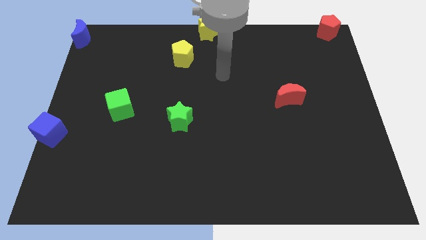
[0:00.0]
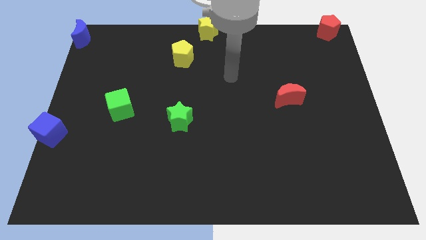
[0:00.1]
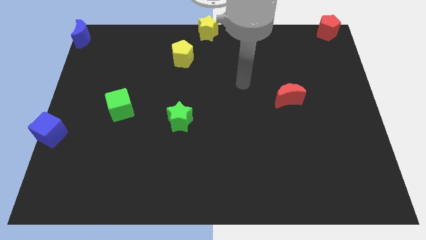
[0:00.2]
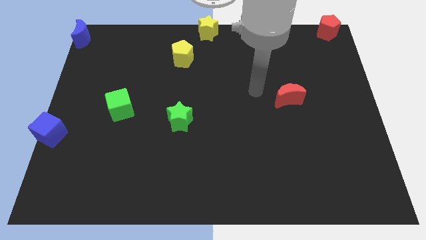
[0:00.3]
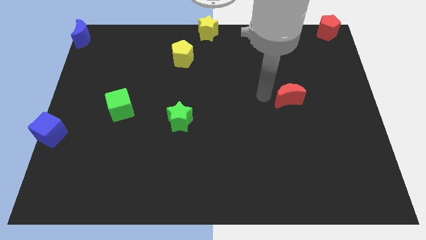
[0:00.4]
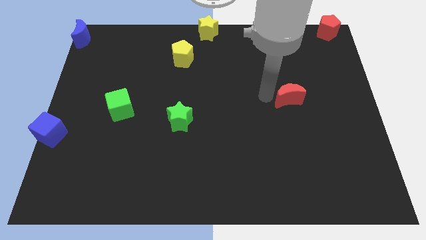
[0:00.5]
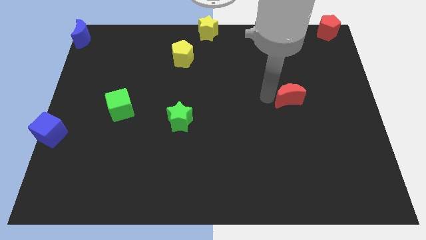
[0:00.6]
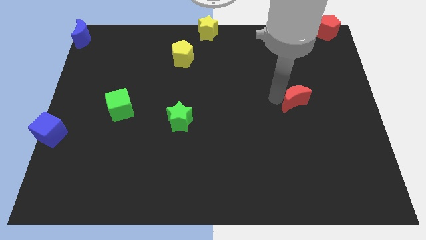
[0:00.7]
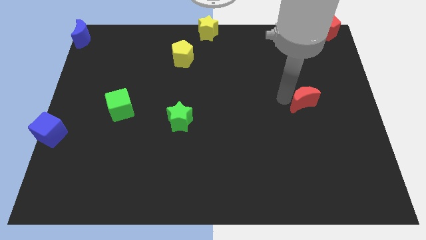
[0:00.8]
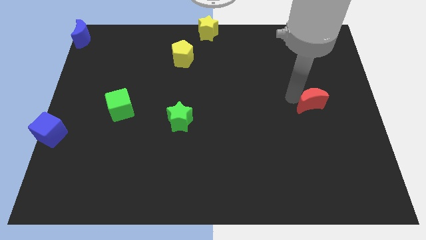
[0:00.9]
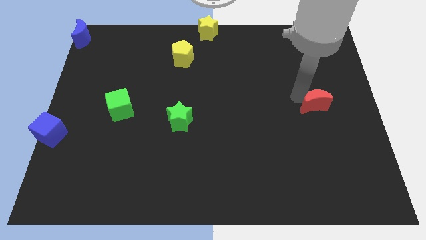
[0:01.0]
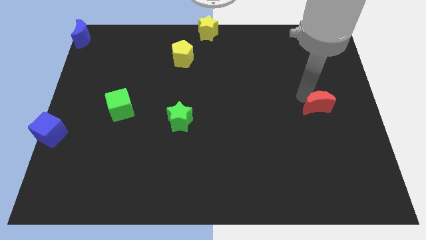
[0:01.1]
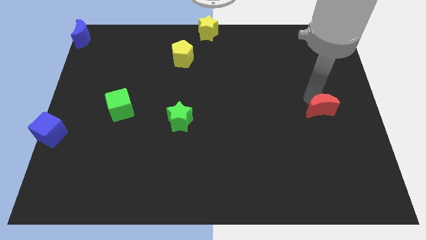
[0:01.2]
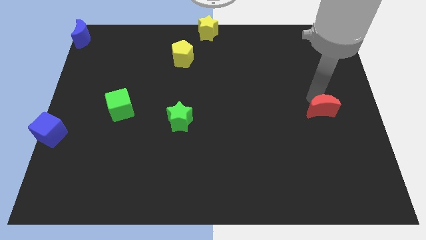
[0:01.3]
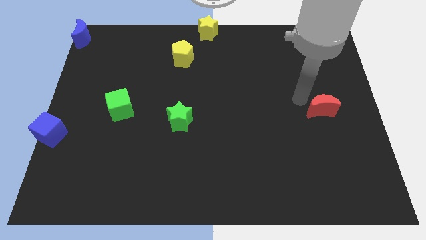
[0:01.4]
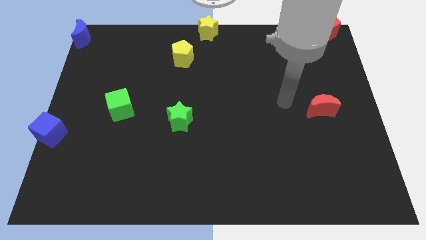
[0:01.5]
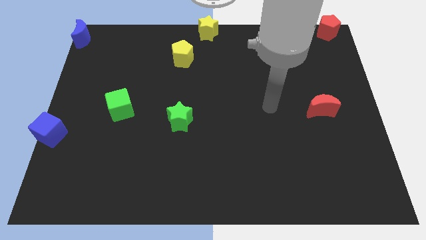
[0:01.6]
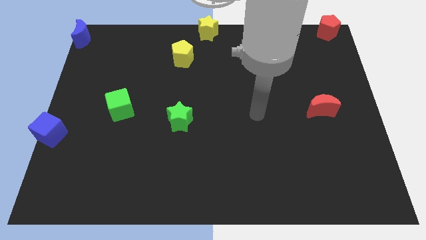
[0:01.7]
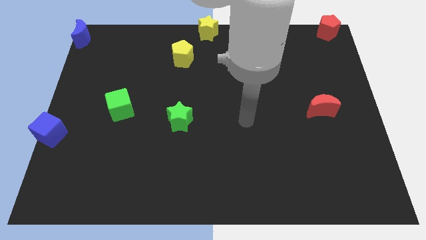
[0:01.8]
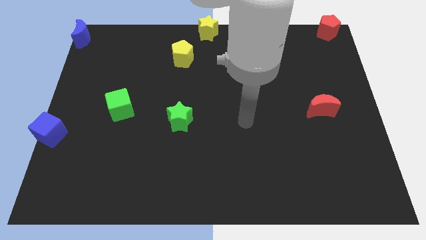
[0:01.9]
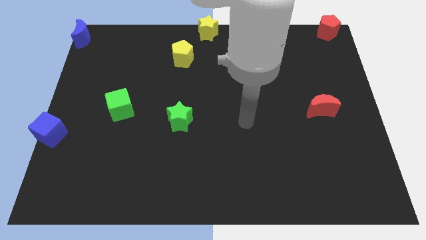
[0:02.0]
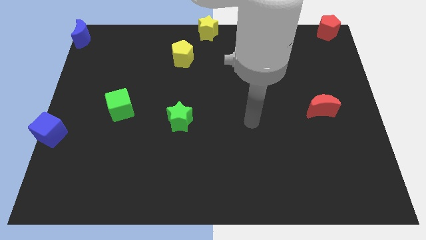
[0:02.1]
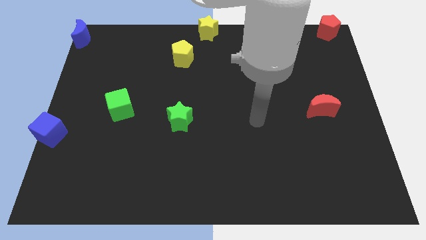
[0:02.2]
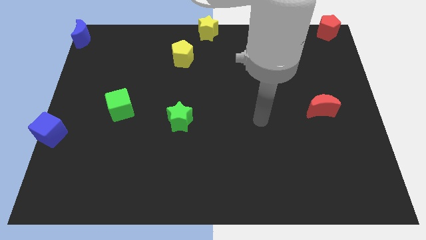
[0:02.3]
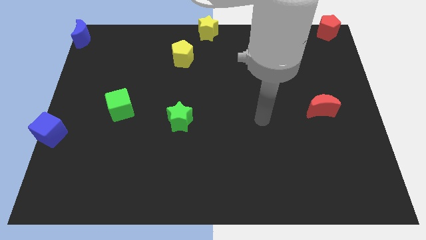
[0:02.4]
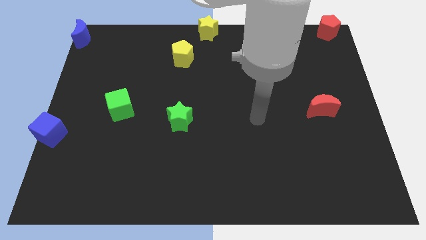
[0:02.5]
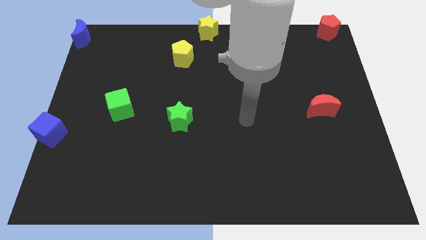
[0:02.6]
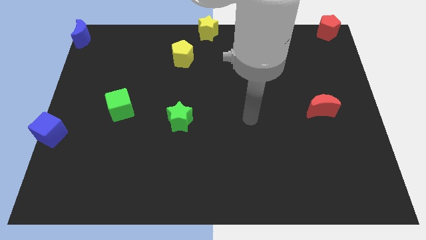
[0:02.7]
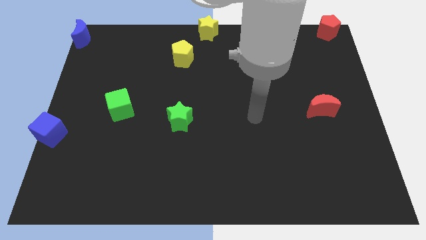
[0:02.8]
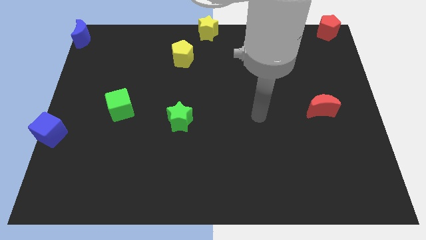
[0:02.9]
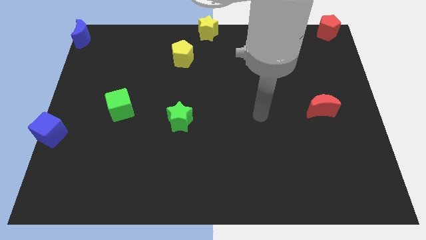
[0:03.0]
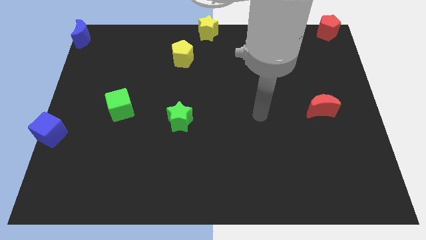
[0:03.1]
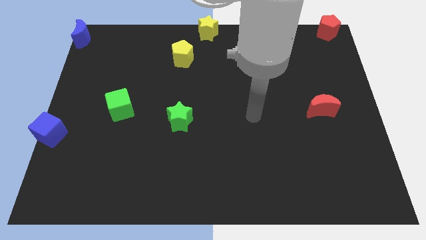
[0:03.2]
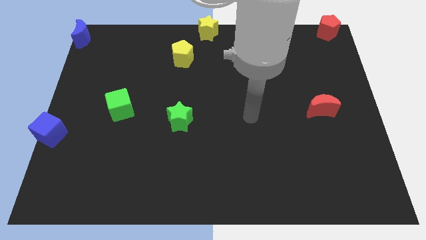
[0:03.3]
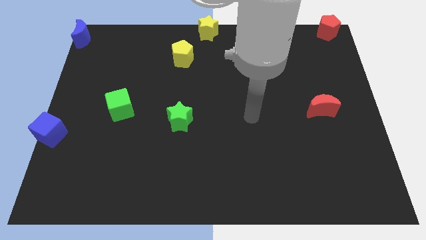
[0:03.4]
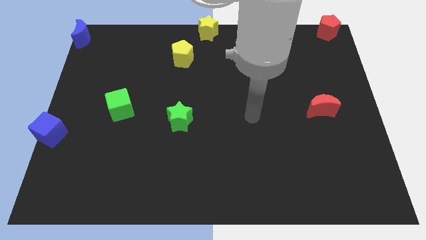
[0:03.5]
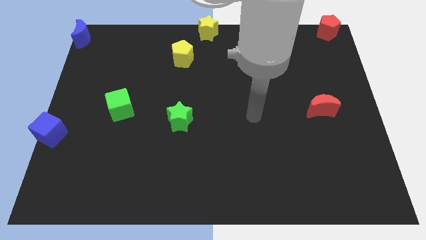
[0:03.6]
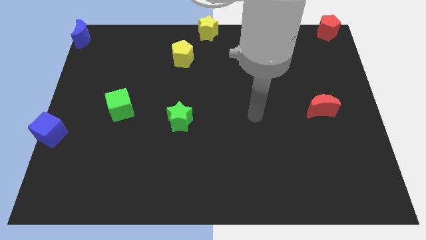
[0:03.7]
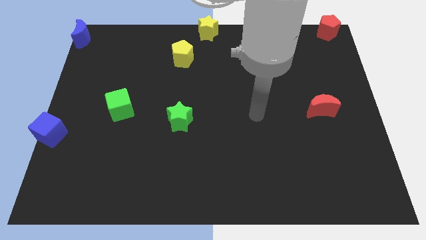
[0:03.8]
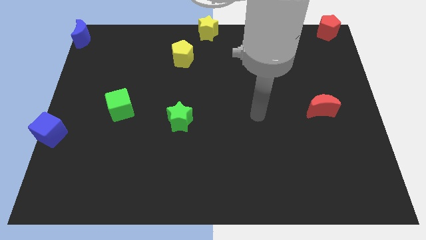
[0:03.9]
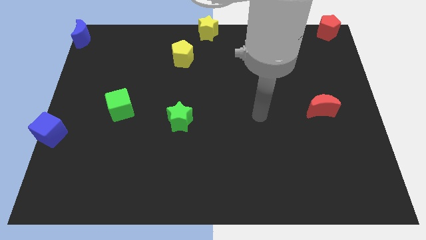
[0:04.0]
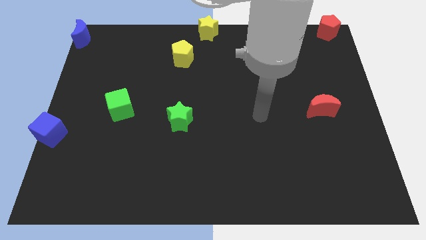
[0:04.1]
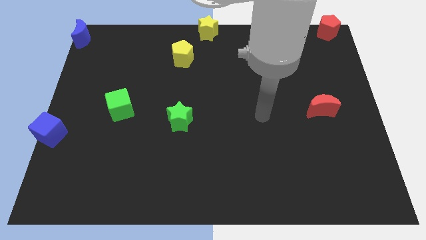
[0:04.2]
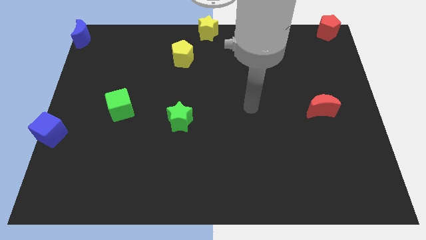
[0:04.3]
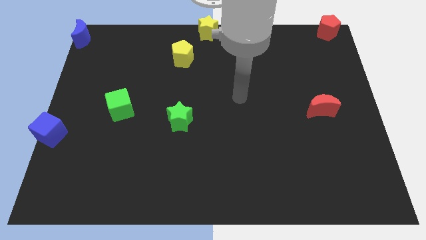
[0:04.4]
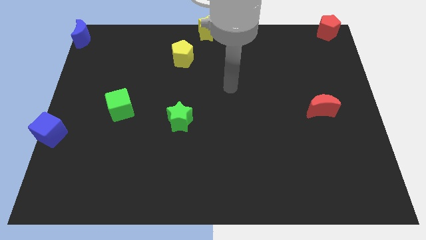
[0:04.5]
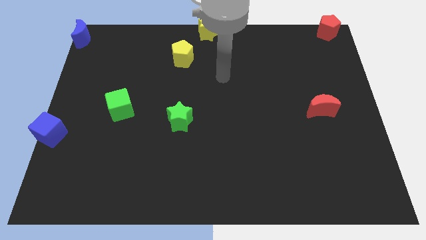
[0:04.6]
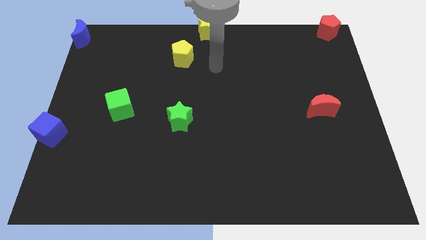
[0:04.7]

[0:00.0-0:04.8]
push the red moon towards right side of the board

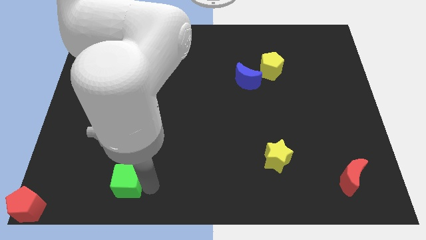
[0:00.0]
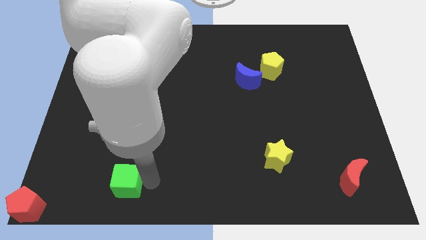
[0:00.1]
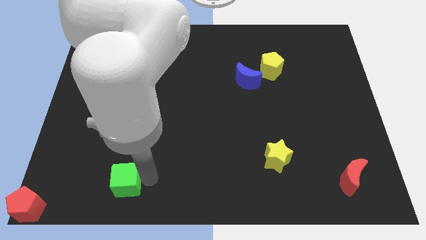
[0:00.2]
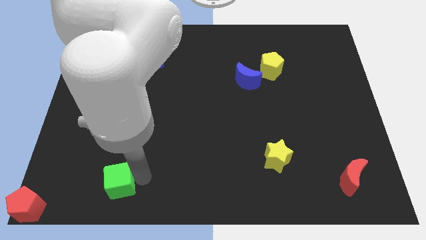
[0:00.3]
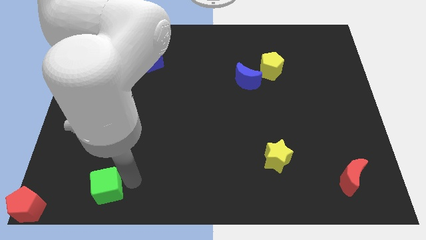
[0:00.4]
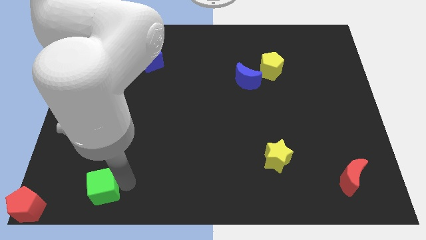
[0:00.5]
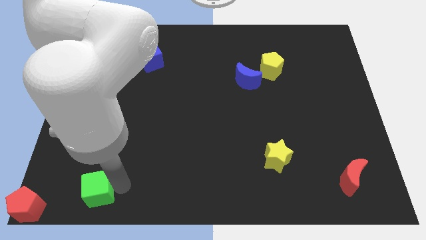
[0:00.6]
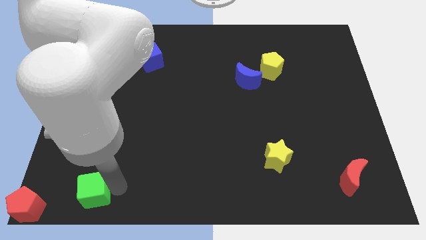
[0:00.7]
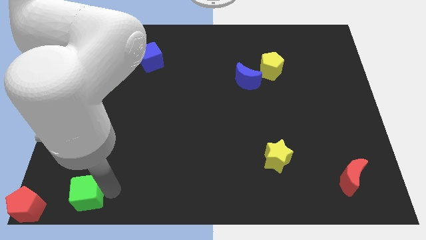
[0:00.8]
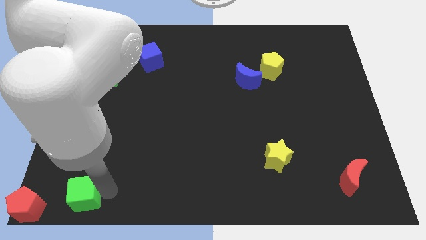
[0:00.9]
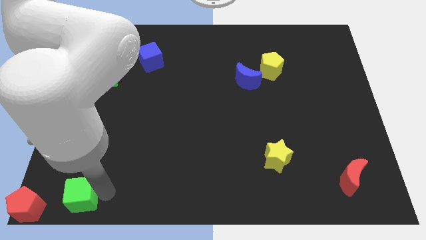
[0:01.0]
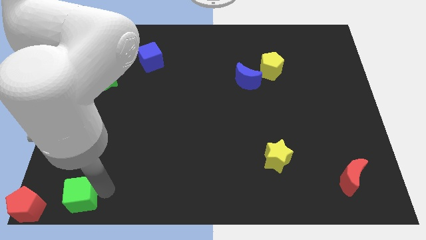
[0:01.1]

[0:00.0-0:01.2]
move the green cube towards the bottom left corner of the board

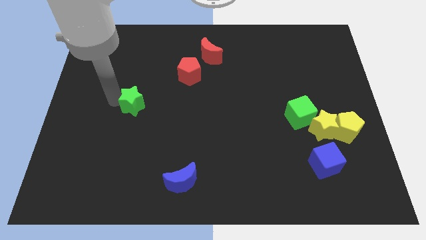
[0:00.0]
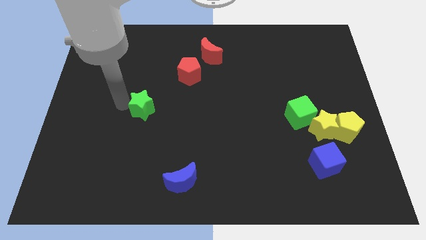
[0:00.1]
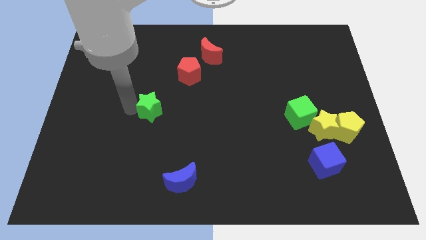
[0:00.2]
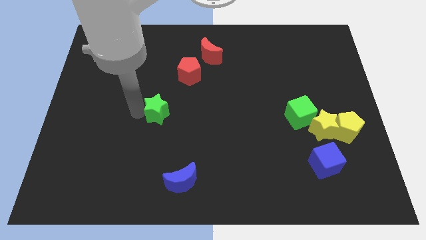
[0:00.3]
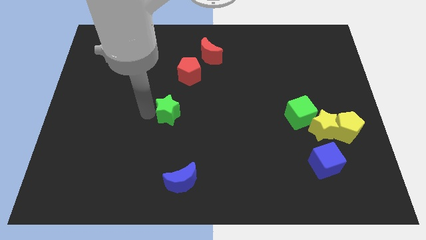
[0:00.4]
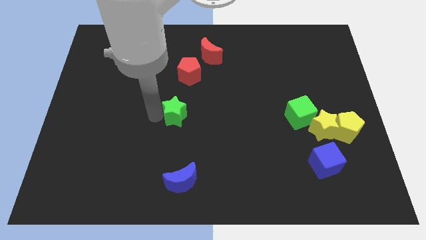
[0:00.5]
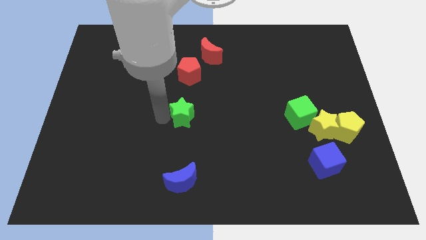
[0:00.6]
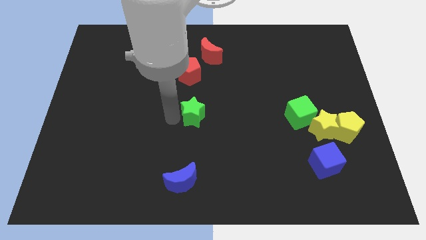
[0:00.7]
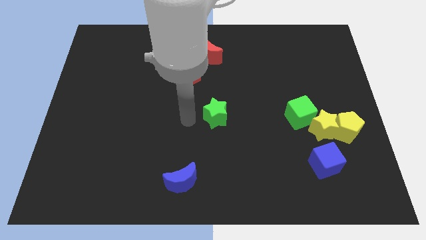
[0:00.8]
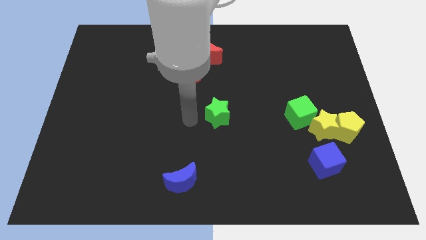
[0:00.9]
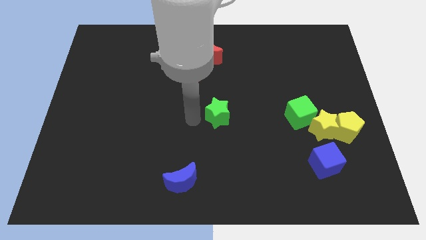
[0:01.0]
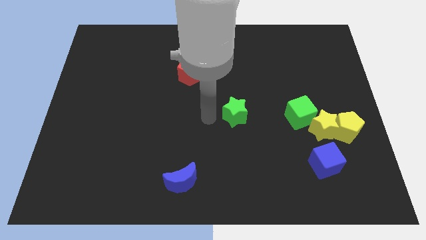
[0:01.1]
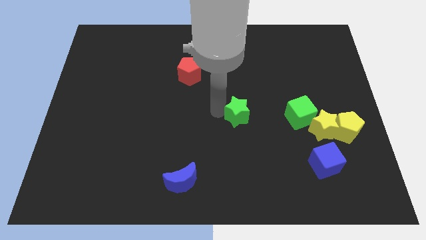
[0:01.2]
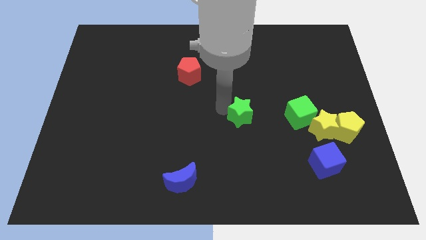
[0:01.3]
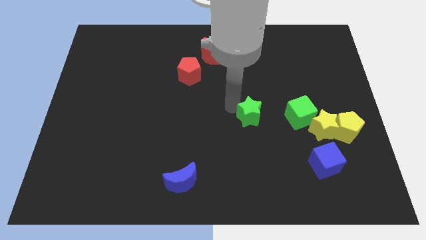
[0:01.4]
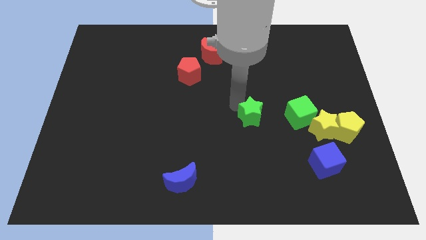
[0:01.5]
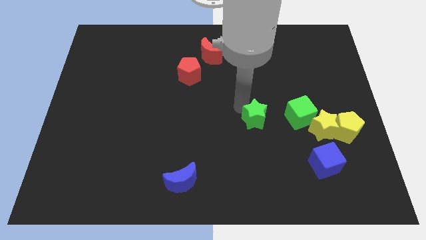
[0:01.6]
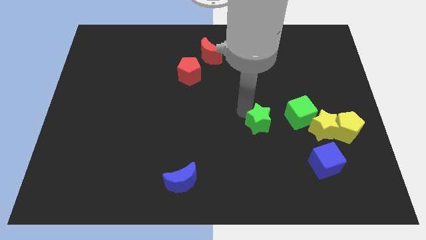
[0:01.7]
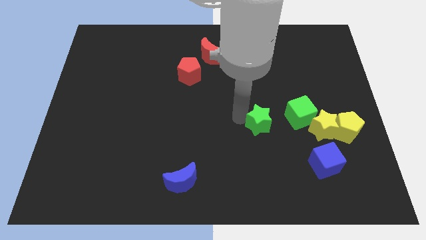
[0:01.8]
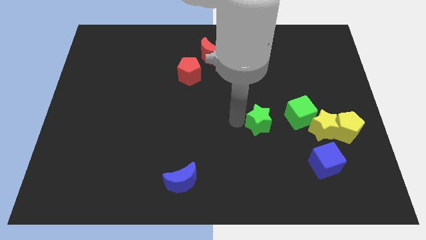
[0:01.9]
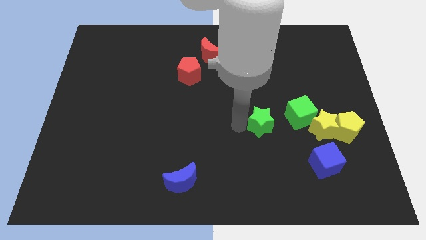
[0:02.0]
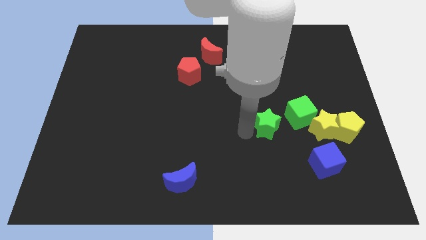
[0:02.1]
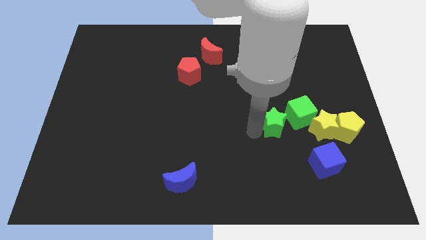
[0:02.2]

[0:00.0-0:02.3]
push the green star into the green cube

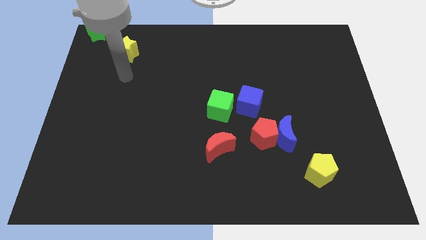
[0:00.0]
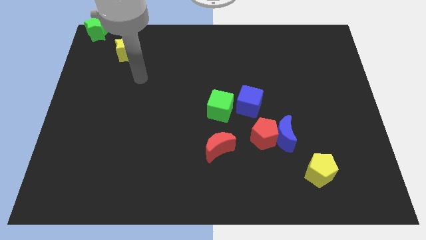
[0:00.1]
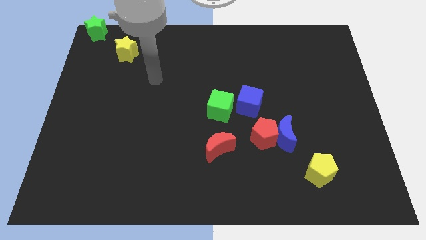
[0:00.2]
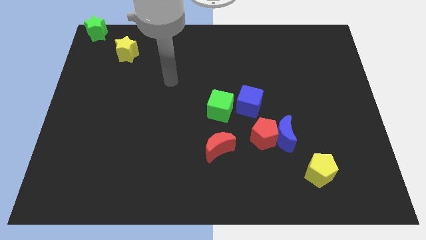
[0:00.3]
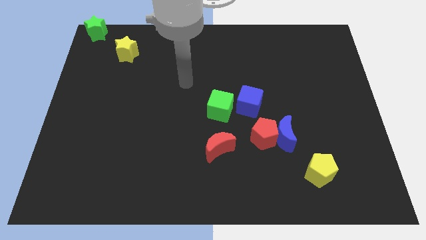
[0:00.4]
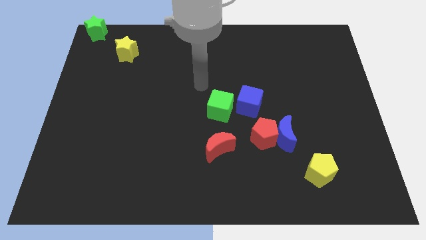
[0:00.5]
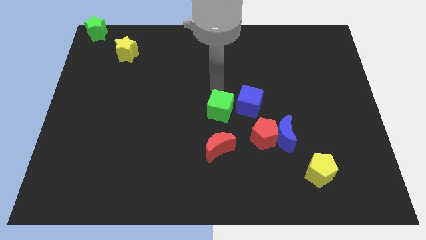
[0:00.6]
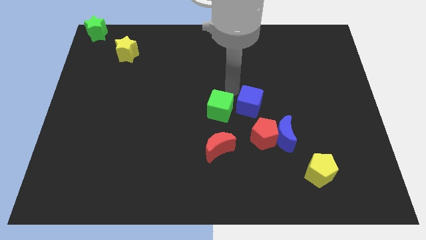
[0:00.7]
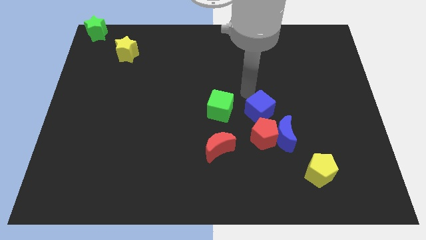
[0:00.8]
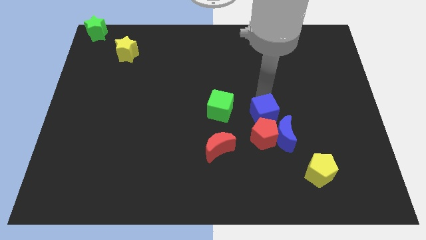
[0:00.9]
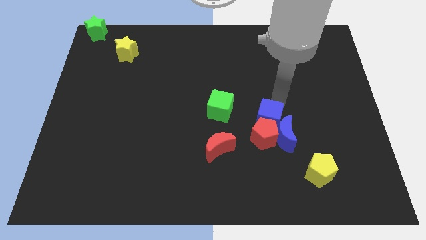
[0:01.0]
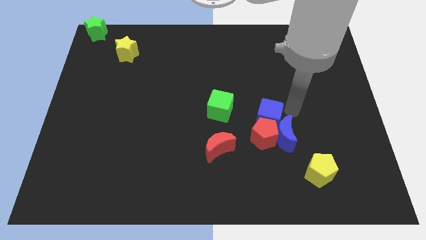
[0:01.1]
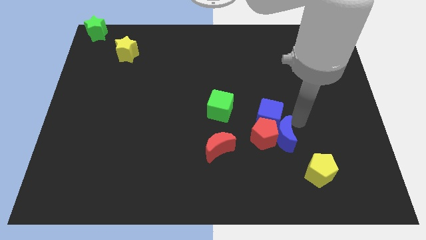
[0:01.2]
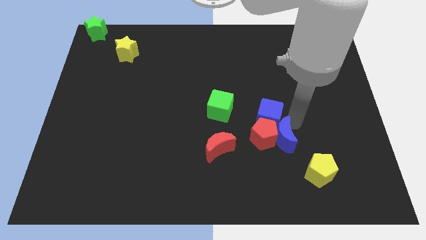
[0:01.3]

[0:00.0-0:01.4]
push the blue cube into the red pentagon
